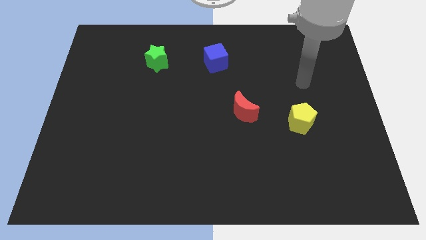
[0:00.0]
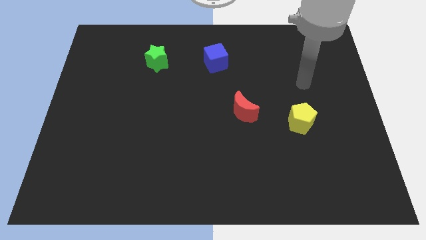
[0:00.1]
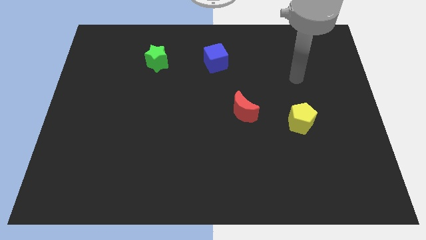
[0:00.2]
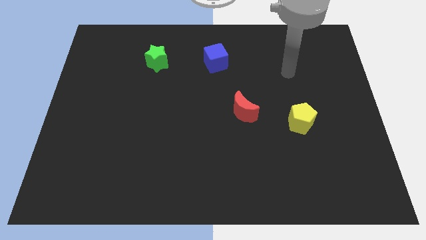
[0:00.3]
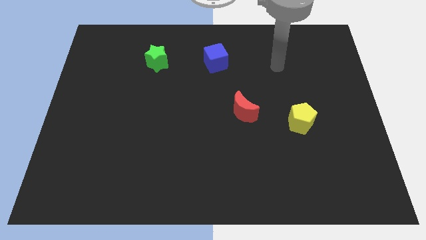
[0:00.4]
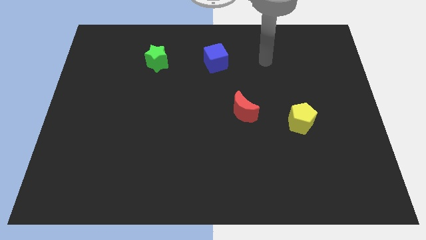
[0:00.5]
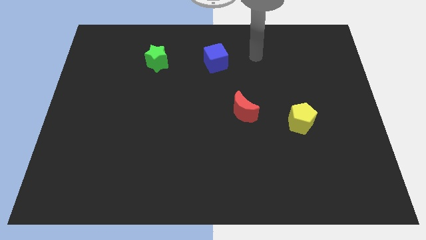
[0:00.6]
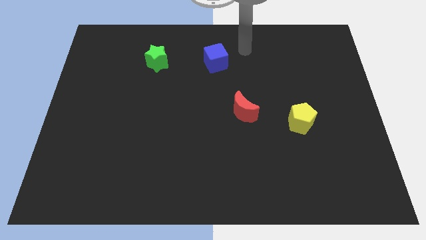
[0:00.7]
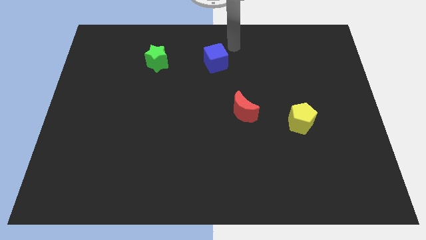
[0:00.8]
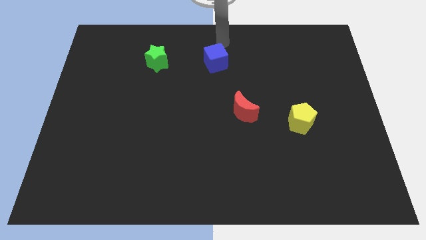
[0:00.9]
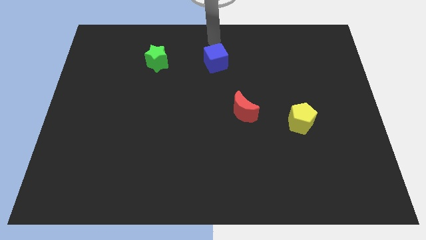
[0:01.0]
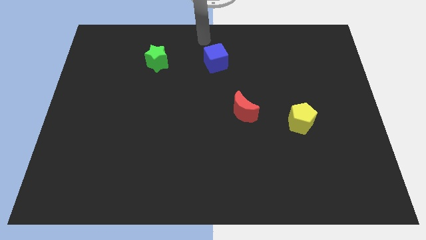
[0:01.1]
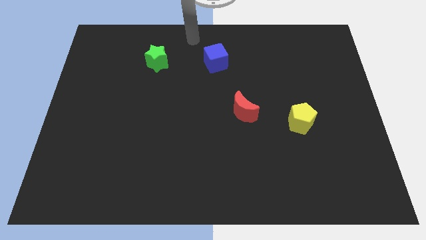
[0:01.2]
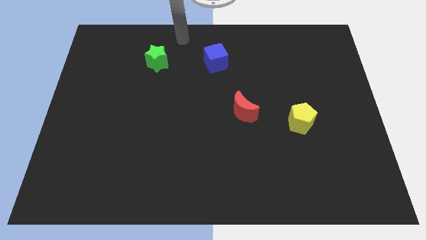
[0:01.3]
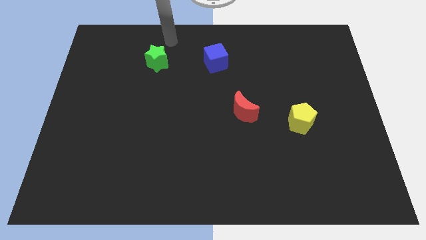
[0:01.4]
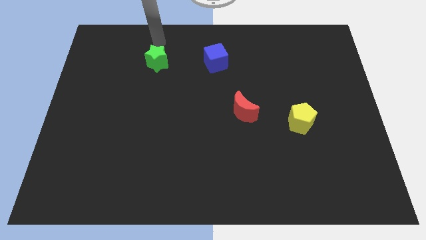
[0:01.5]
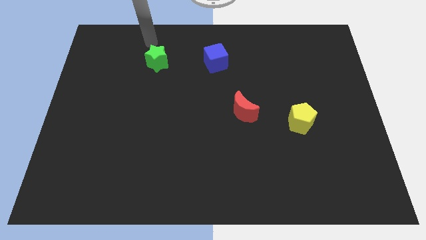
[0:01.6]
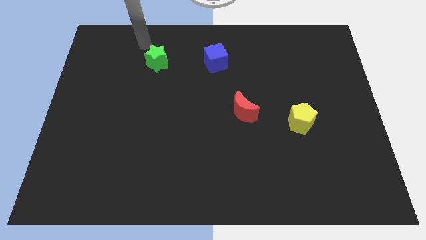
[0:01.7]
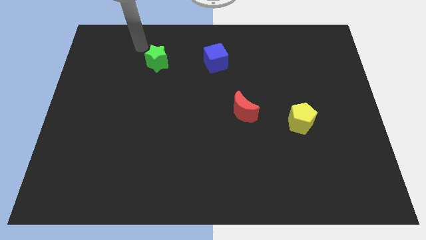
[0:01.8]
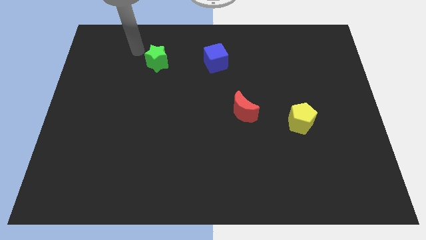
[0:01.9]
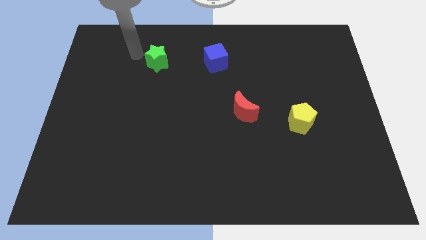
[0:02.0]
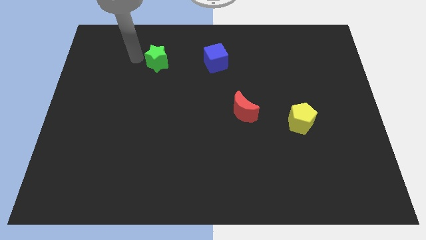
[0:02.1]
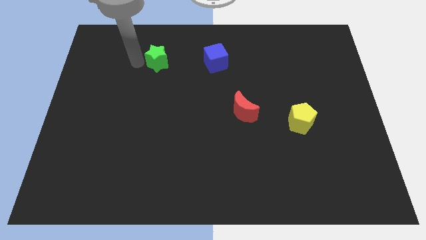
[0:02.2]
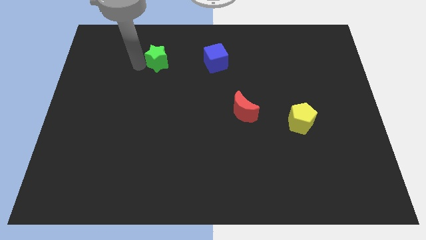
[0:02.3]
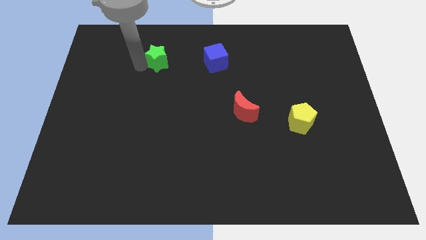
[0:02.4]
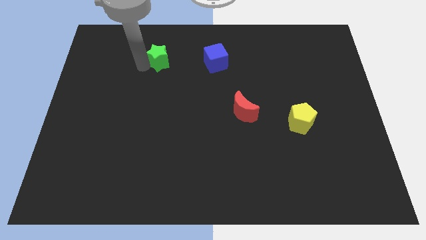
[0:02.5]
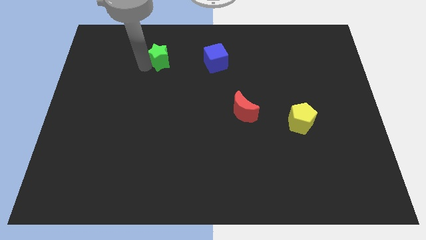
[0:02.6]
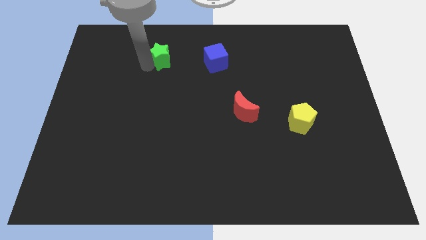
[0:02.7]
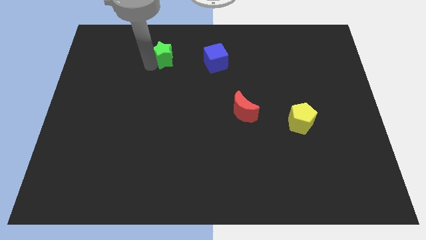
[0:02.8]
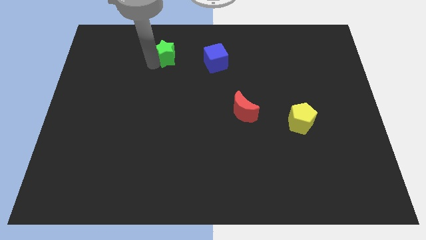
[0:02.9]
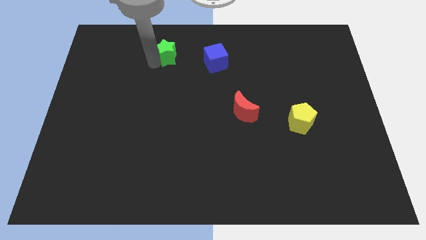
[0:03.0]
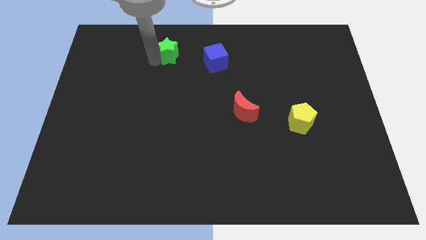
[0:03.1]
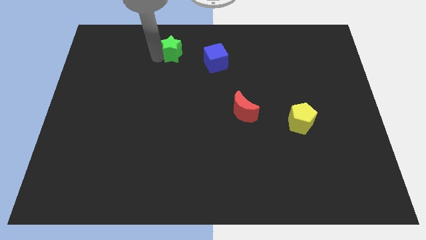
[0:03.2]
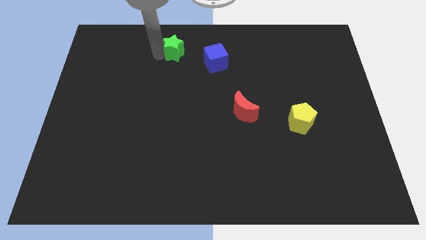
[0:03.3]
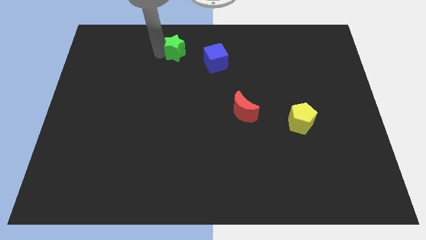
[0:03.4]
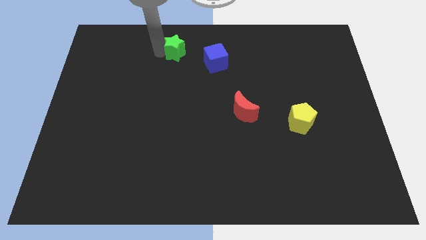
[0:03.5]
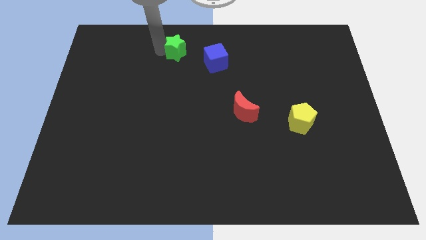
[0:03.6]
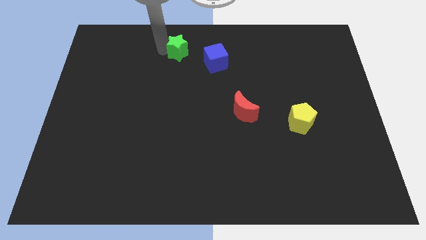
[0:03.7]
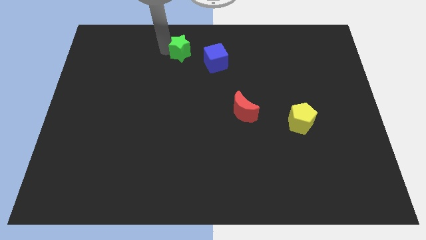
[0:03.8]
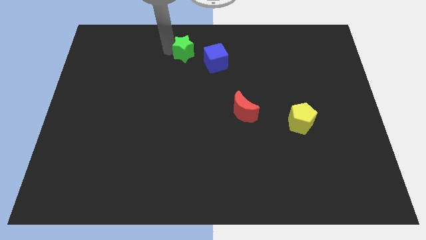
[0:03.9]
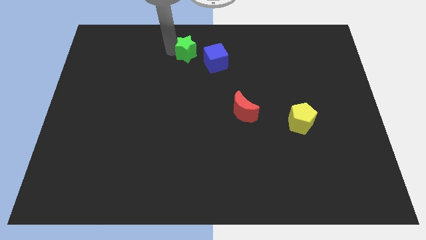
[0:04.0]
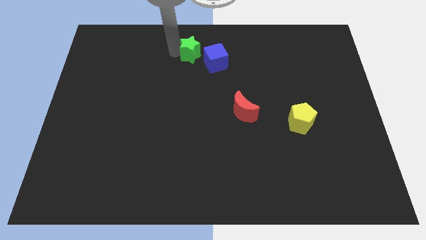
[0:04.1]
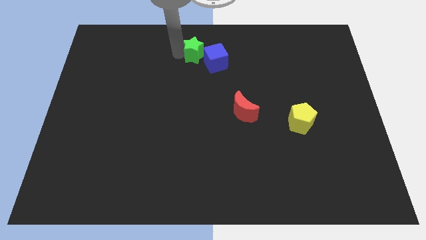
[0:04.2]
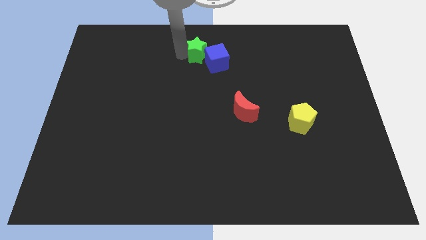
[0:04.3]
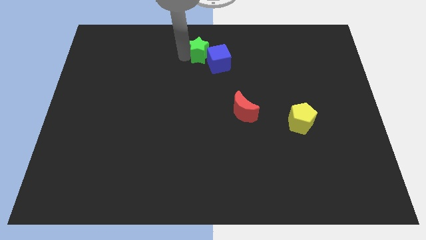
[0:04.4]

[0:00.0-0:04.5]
move the green block towards the cube

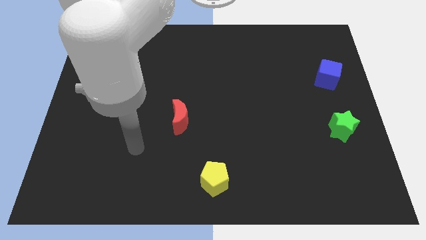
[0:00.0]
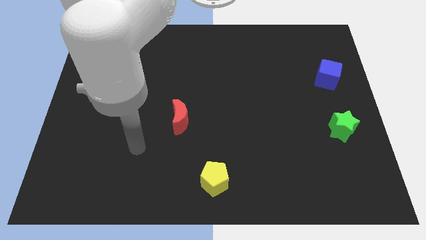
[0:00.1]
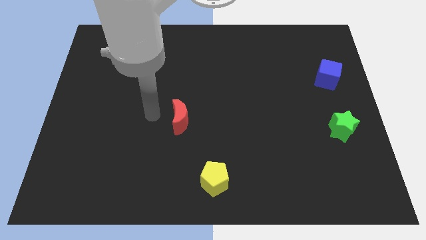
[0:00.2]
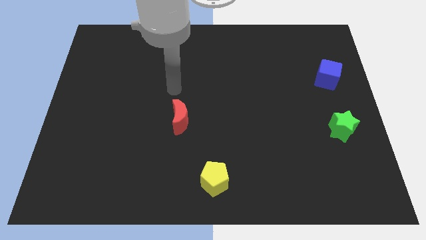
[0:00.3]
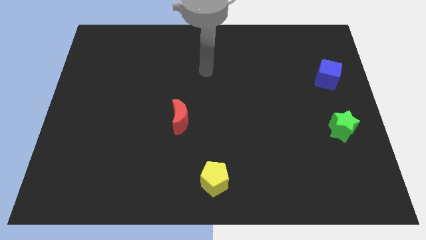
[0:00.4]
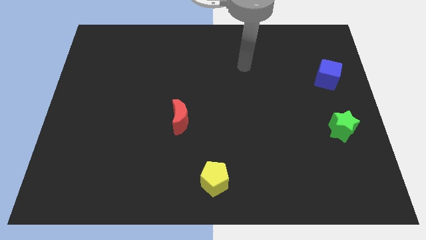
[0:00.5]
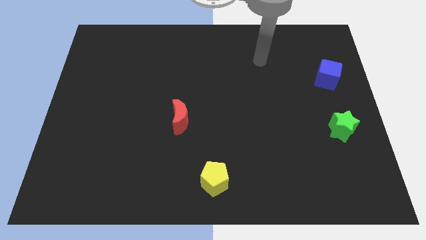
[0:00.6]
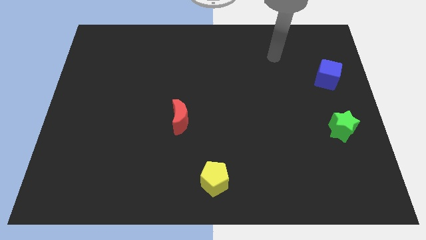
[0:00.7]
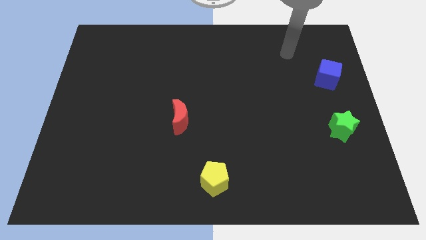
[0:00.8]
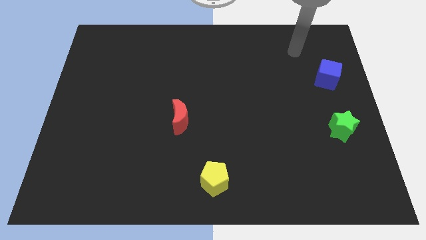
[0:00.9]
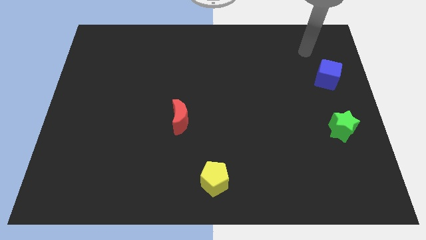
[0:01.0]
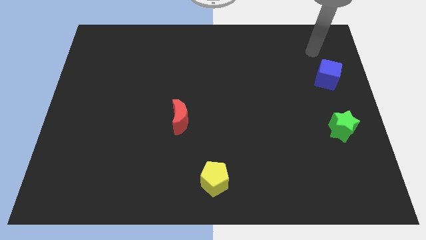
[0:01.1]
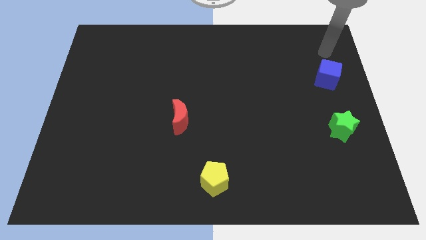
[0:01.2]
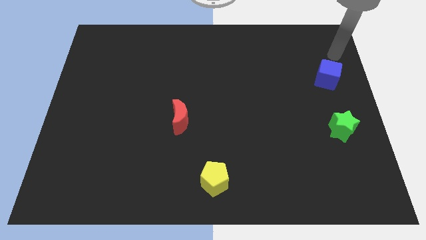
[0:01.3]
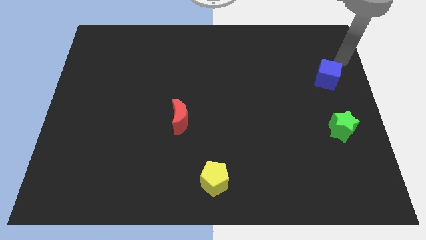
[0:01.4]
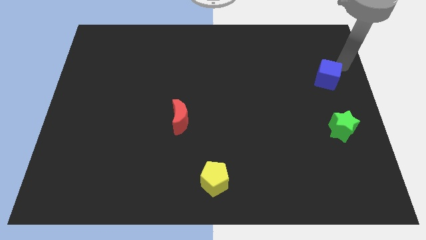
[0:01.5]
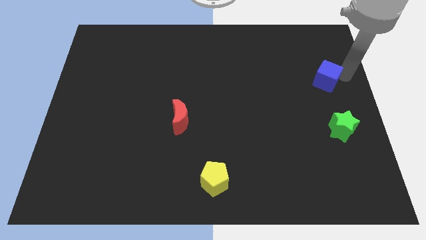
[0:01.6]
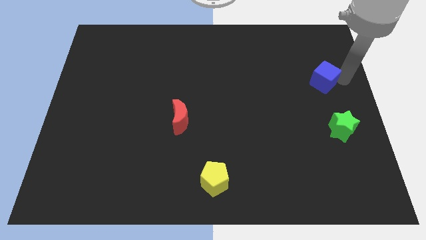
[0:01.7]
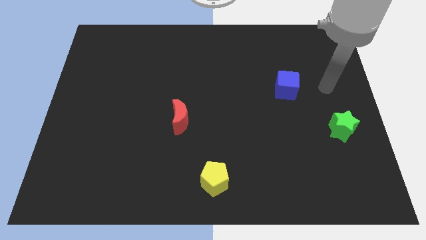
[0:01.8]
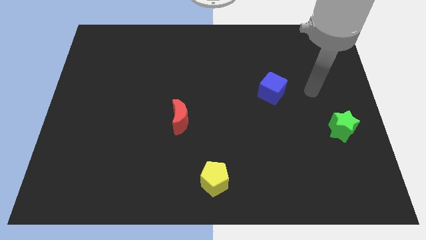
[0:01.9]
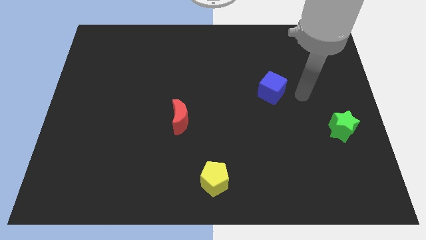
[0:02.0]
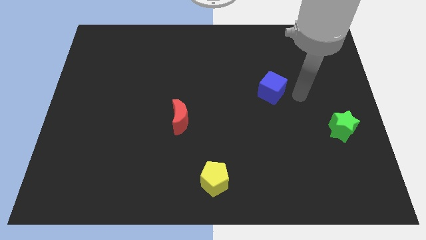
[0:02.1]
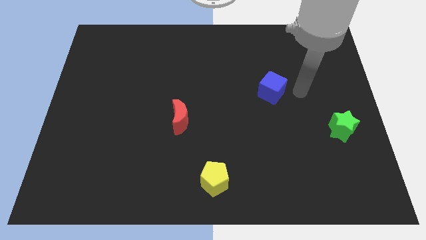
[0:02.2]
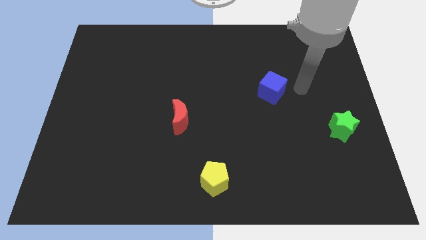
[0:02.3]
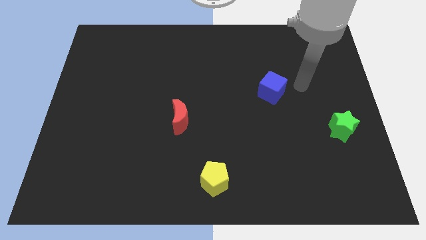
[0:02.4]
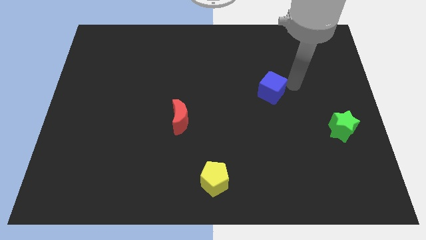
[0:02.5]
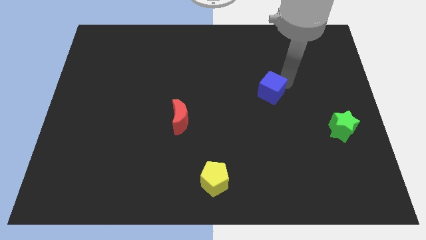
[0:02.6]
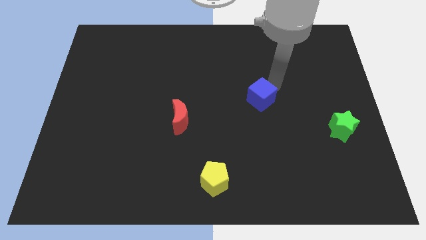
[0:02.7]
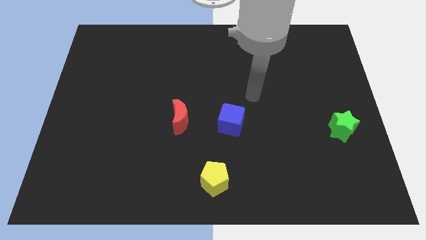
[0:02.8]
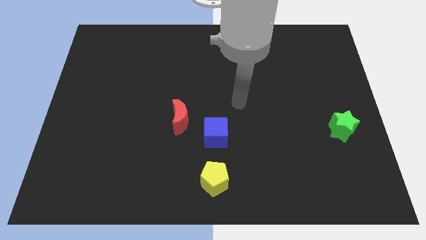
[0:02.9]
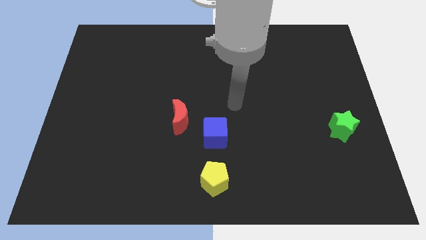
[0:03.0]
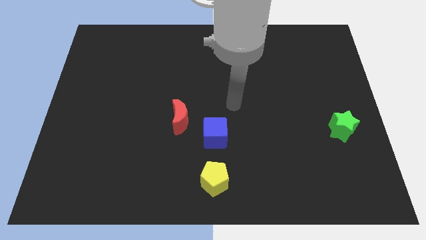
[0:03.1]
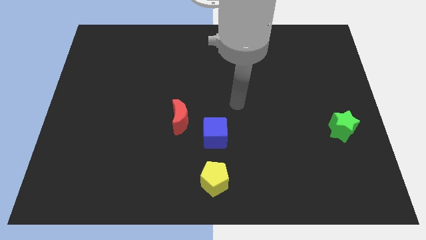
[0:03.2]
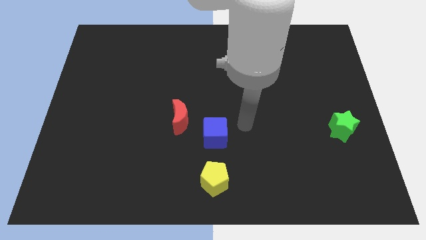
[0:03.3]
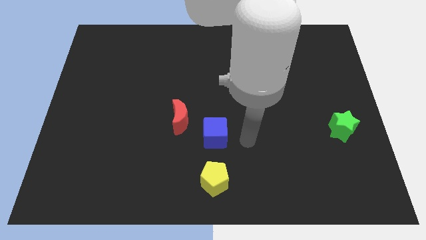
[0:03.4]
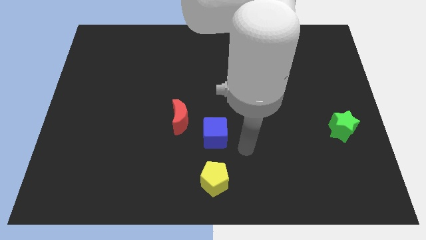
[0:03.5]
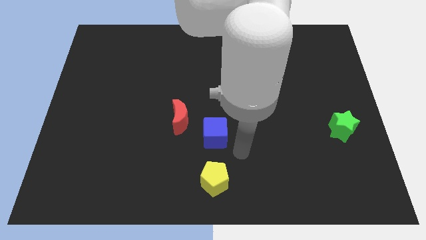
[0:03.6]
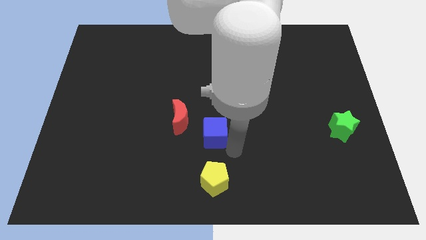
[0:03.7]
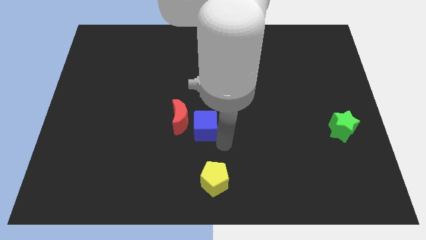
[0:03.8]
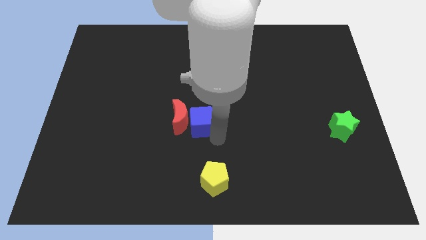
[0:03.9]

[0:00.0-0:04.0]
put the cube close to the red block
